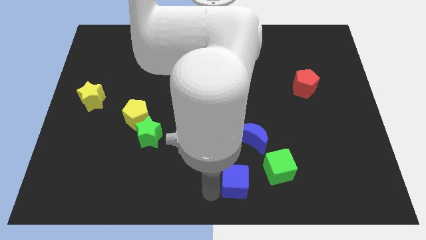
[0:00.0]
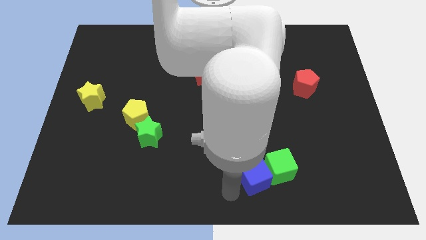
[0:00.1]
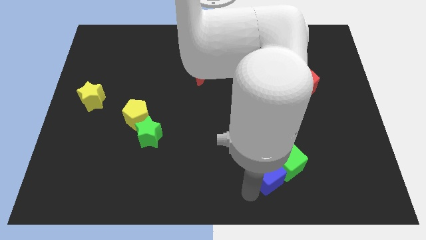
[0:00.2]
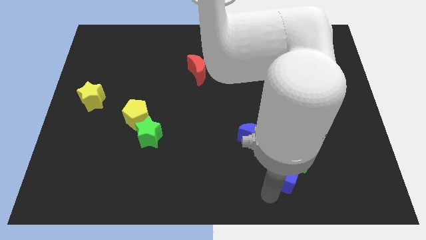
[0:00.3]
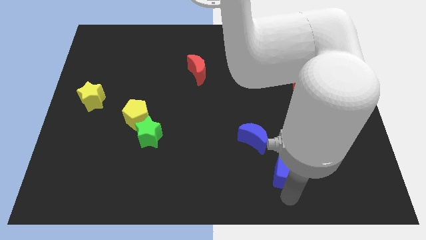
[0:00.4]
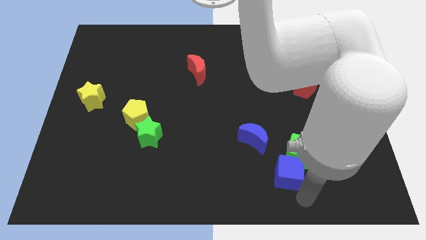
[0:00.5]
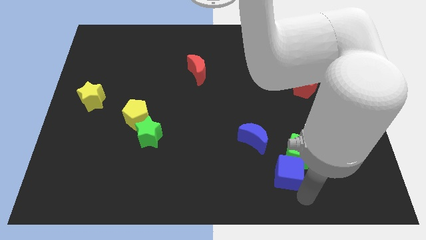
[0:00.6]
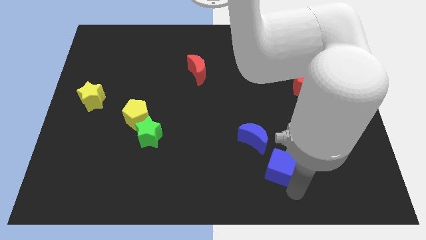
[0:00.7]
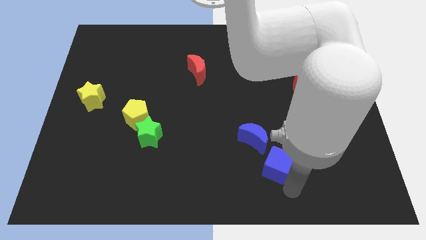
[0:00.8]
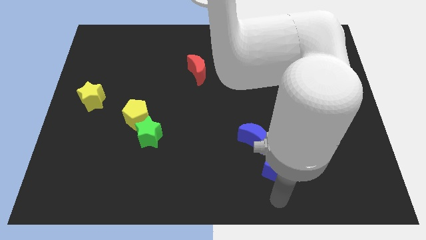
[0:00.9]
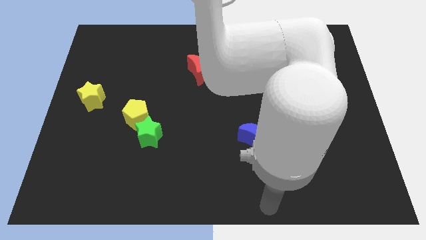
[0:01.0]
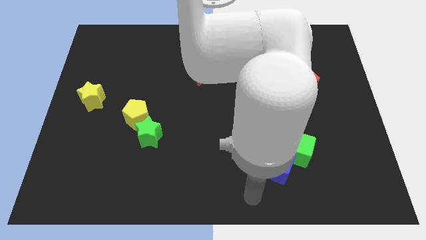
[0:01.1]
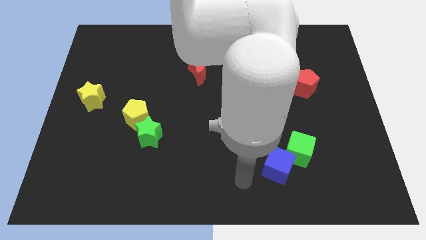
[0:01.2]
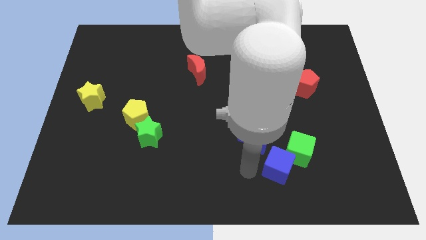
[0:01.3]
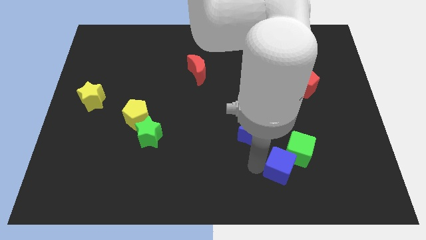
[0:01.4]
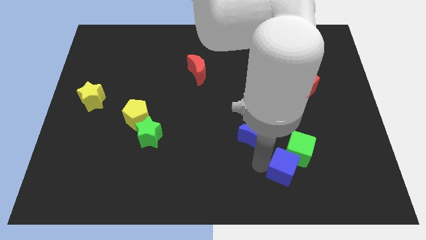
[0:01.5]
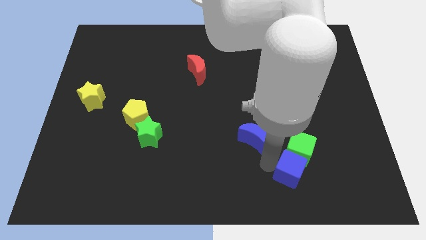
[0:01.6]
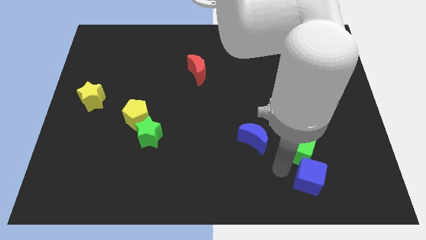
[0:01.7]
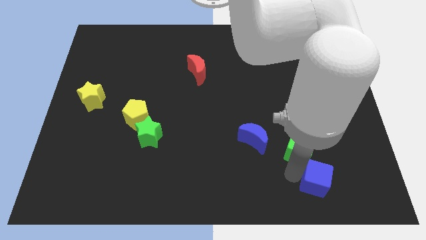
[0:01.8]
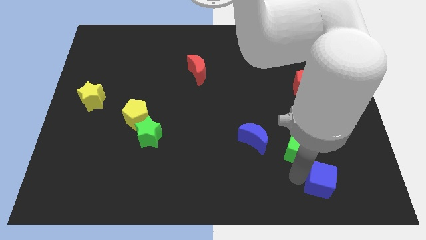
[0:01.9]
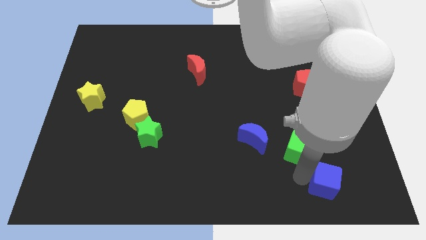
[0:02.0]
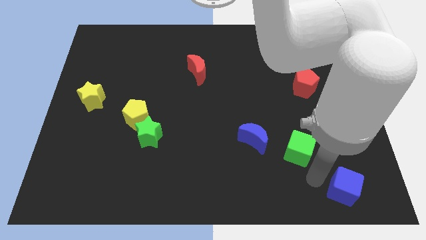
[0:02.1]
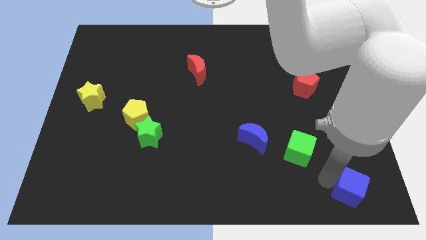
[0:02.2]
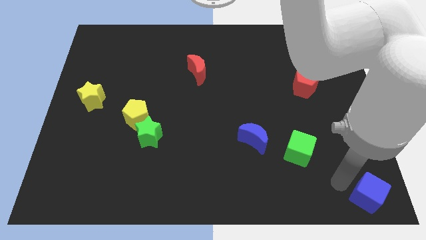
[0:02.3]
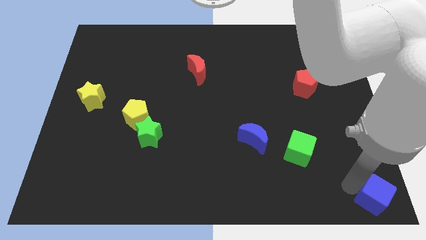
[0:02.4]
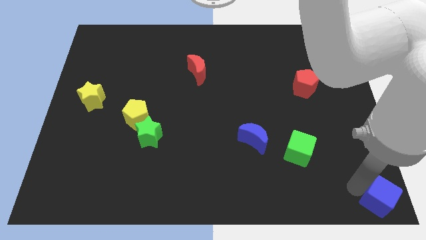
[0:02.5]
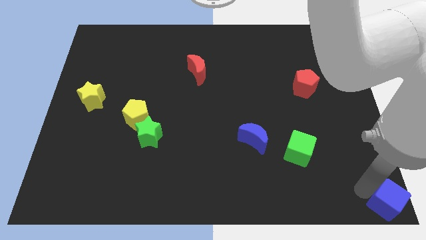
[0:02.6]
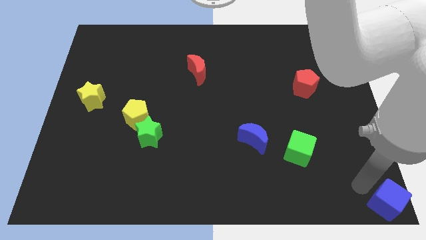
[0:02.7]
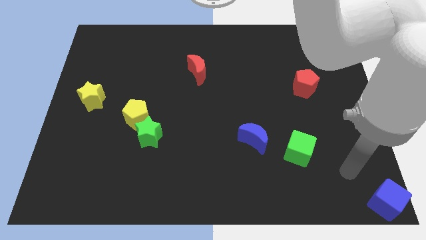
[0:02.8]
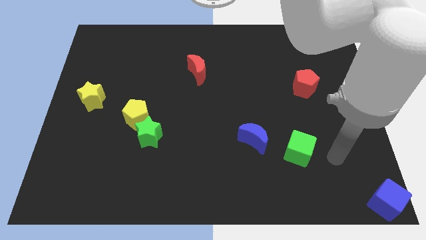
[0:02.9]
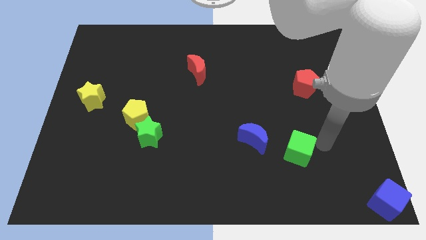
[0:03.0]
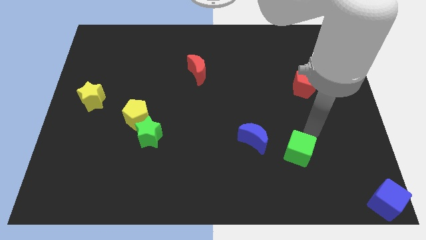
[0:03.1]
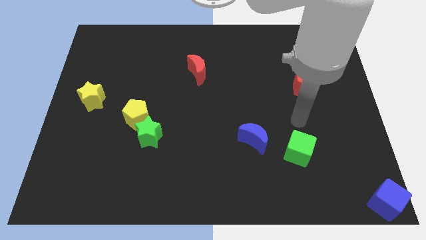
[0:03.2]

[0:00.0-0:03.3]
separate blue cube from green cube

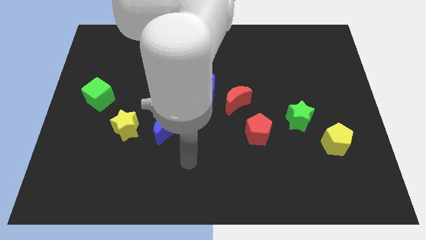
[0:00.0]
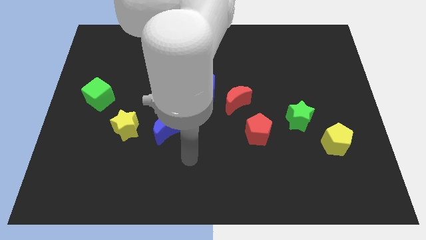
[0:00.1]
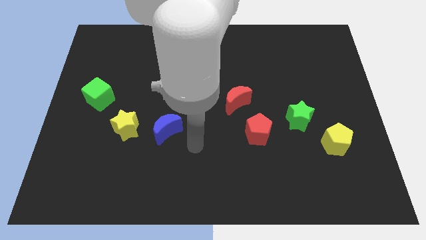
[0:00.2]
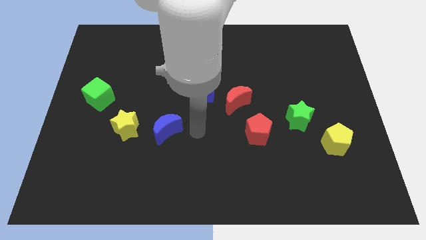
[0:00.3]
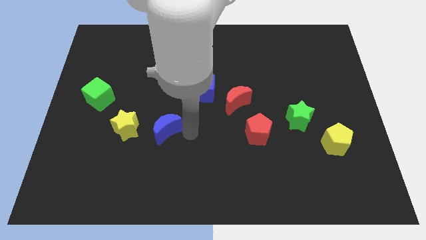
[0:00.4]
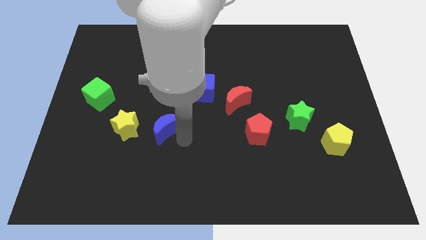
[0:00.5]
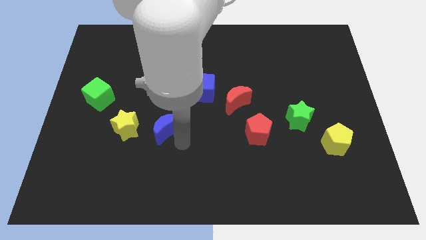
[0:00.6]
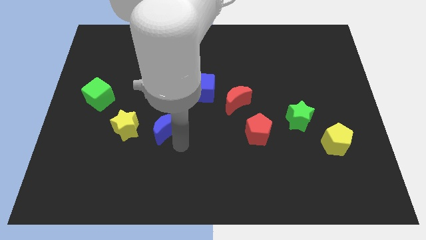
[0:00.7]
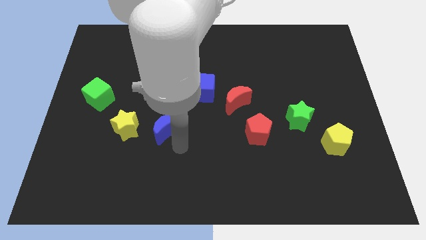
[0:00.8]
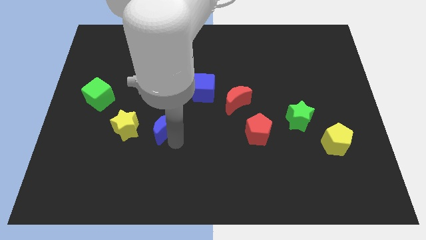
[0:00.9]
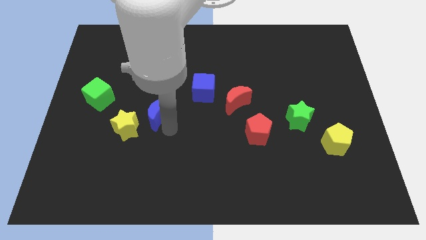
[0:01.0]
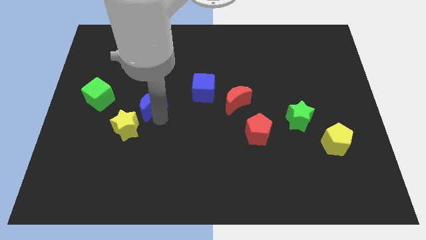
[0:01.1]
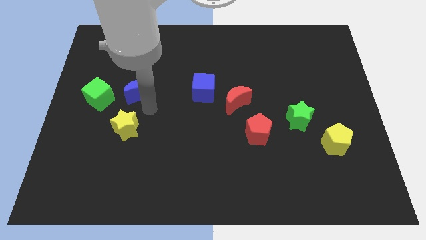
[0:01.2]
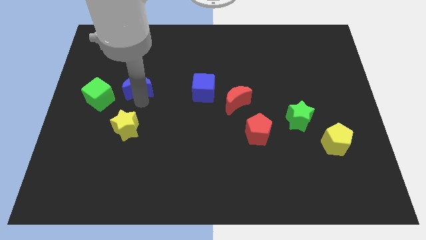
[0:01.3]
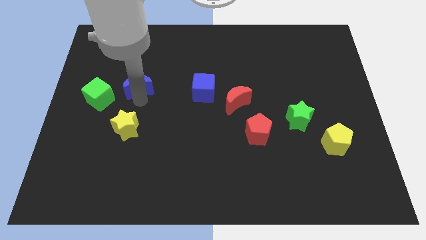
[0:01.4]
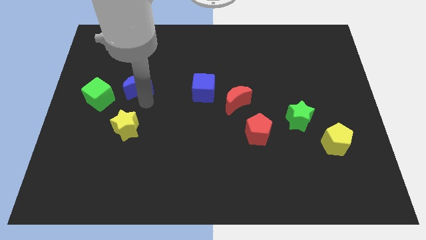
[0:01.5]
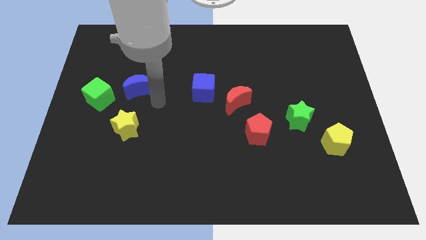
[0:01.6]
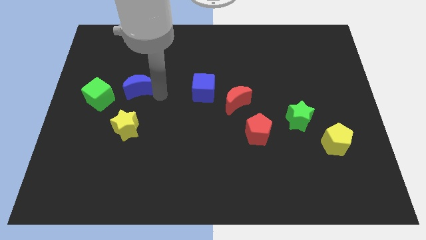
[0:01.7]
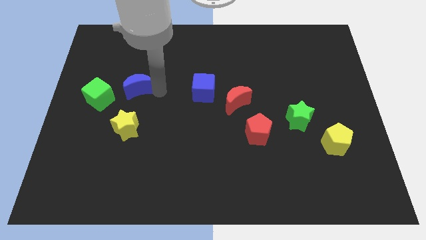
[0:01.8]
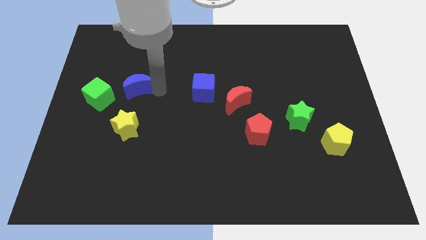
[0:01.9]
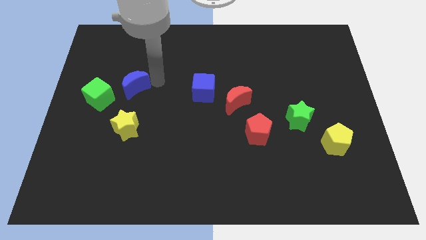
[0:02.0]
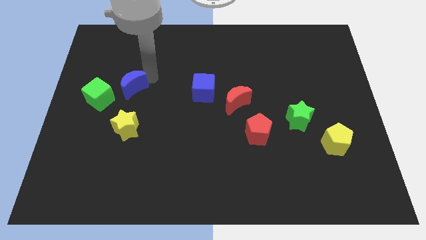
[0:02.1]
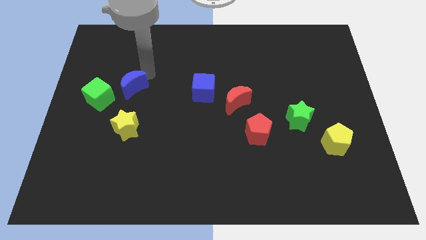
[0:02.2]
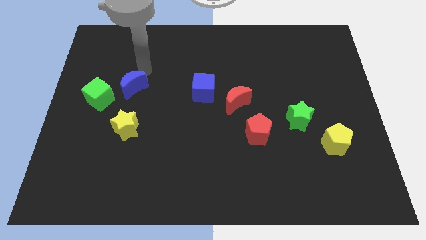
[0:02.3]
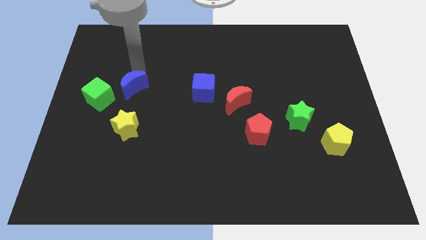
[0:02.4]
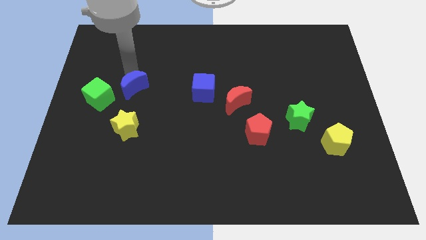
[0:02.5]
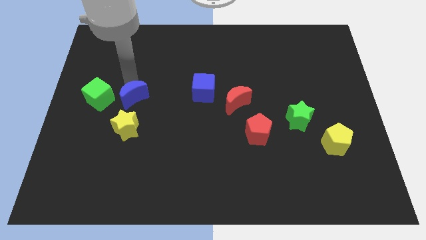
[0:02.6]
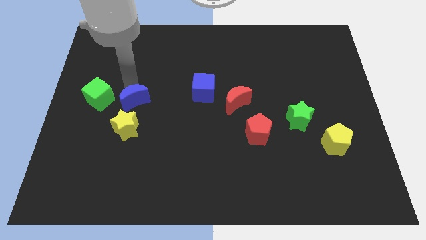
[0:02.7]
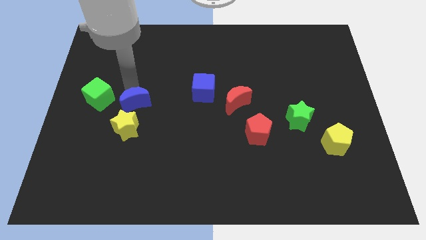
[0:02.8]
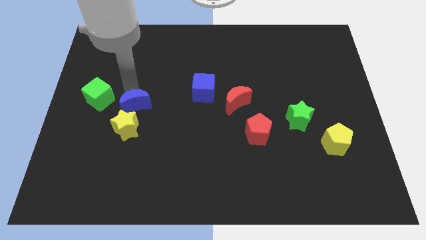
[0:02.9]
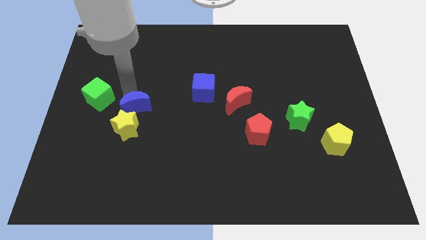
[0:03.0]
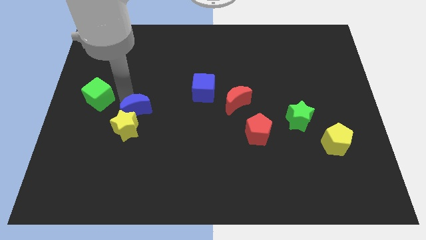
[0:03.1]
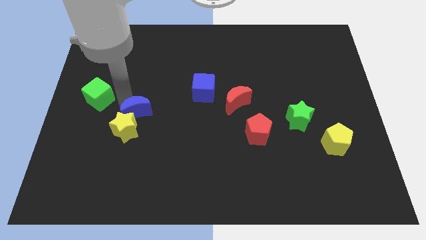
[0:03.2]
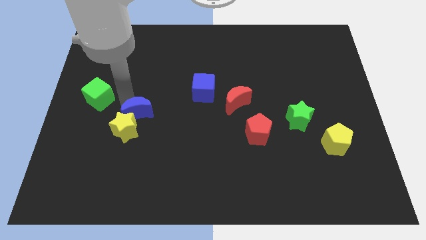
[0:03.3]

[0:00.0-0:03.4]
push the blue crescent into the top side of the yellow star

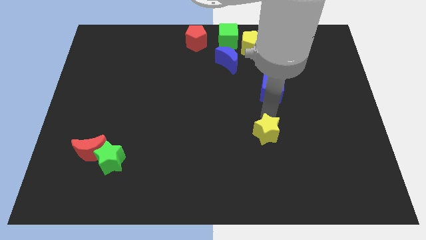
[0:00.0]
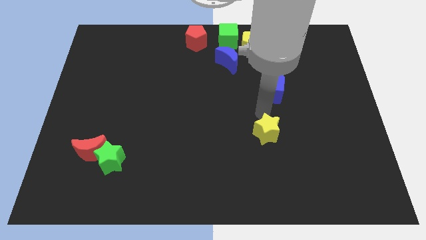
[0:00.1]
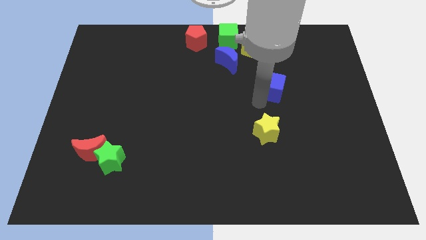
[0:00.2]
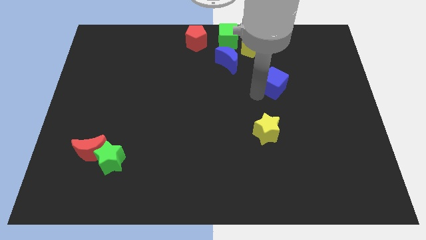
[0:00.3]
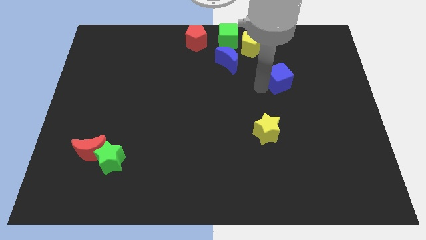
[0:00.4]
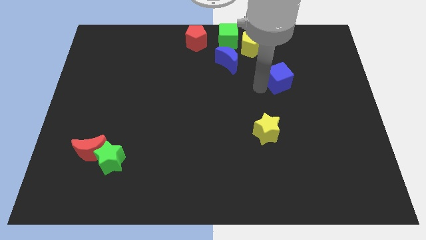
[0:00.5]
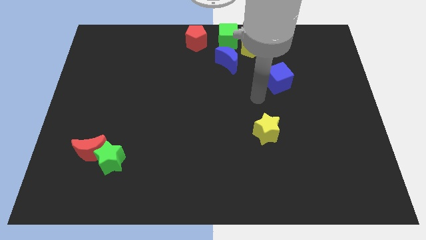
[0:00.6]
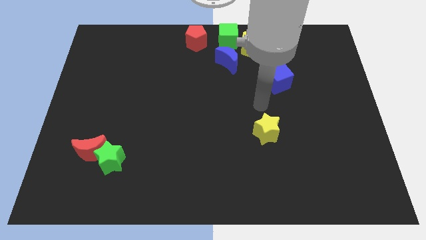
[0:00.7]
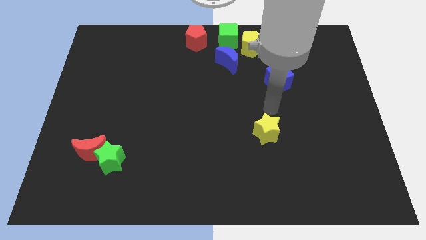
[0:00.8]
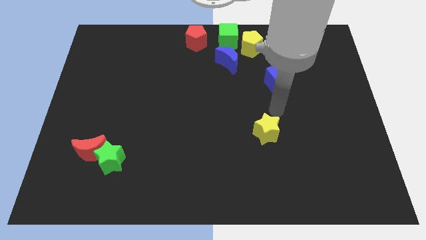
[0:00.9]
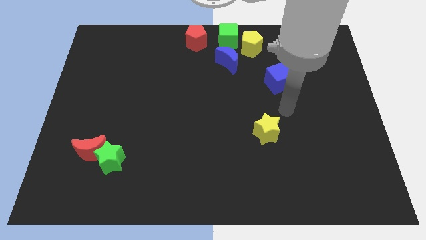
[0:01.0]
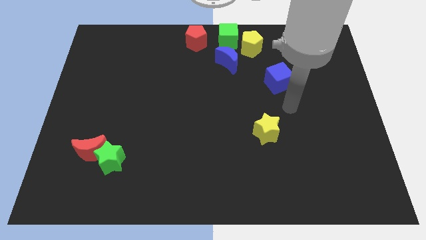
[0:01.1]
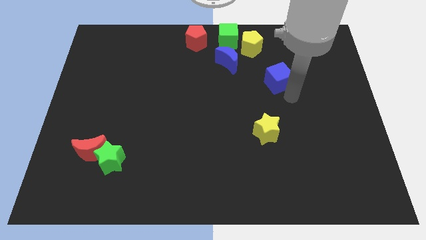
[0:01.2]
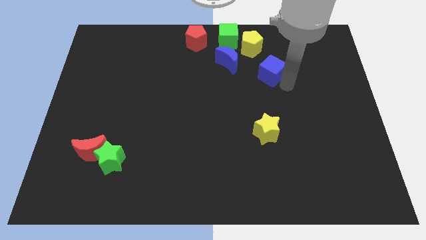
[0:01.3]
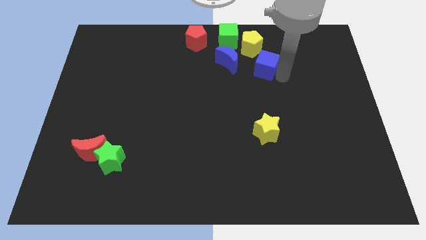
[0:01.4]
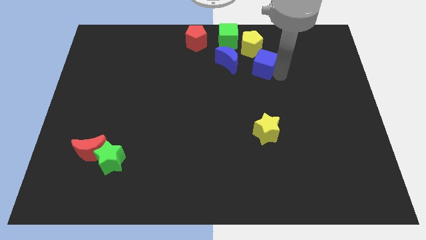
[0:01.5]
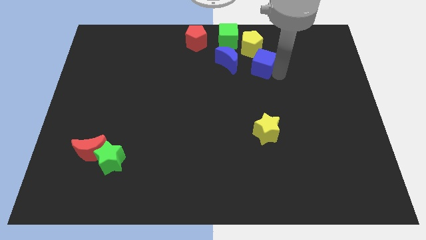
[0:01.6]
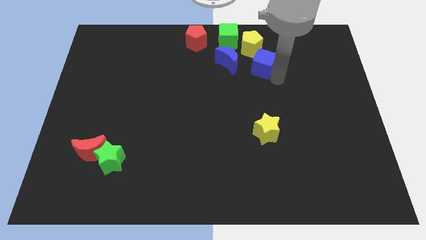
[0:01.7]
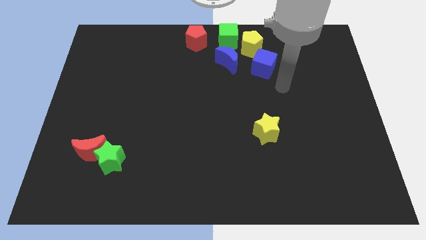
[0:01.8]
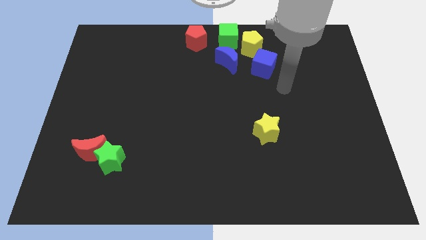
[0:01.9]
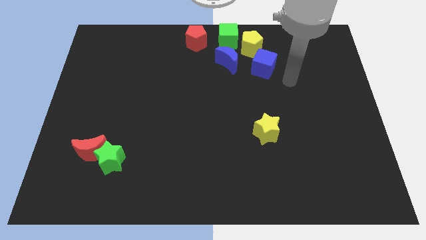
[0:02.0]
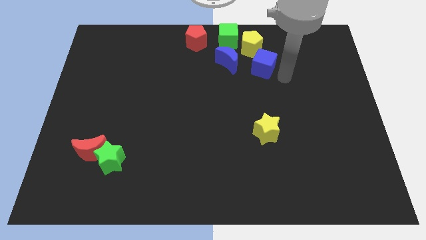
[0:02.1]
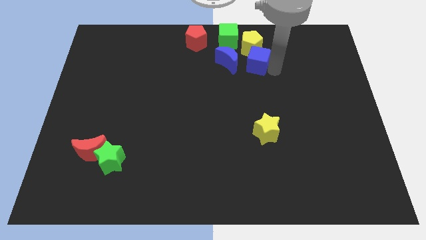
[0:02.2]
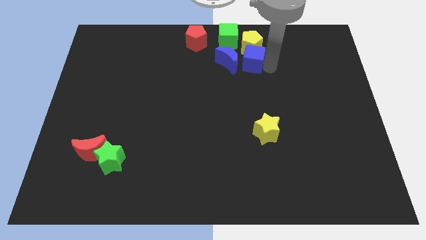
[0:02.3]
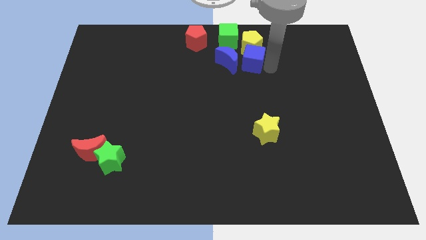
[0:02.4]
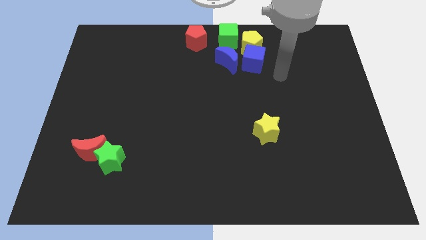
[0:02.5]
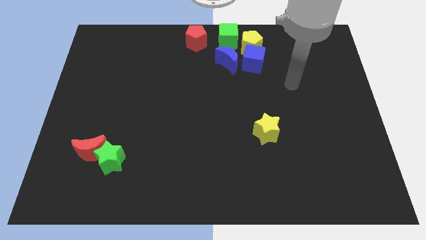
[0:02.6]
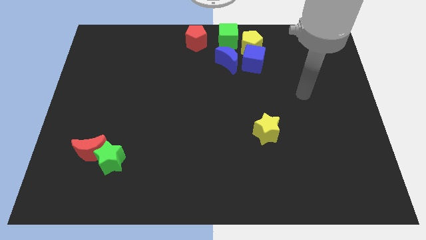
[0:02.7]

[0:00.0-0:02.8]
place blue cube below yellow pentagon
